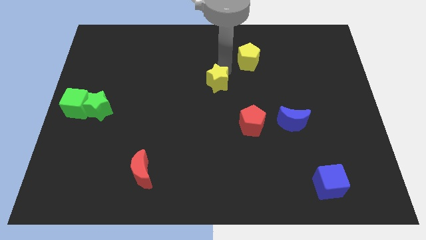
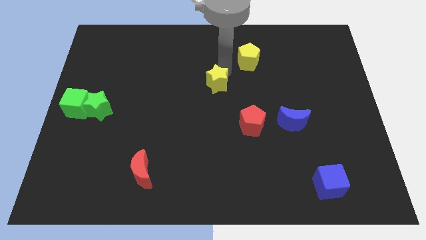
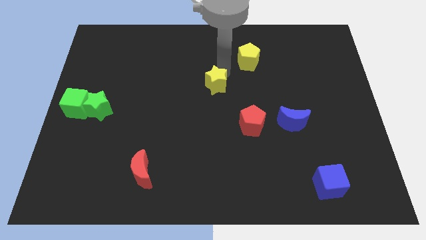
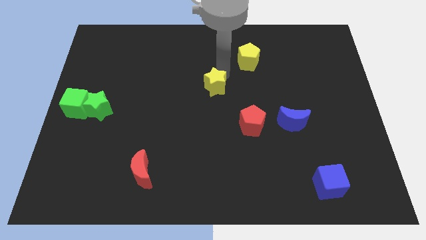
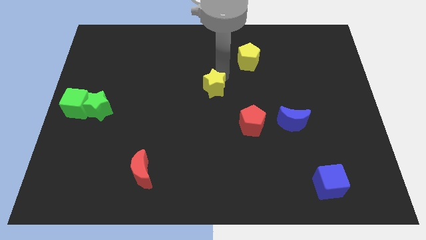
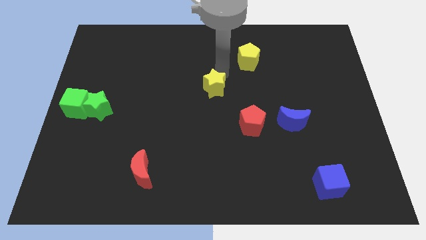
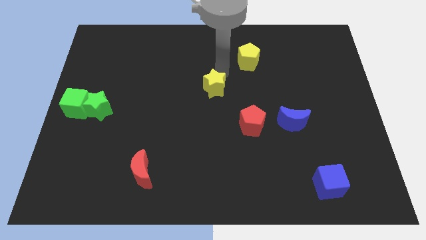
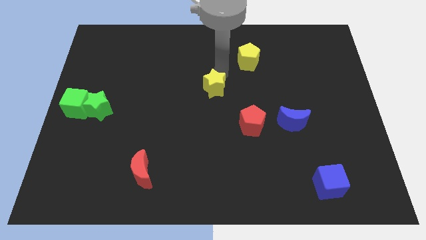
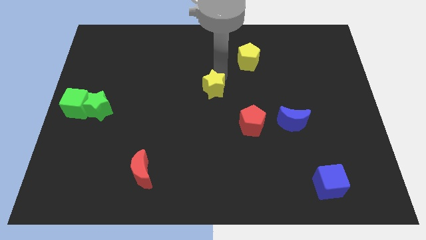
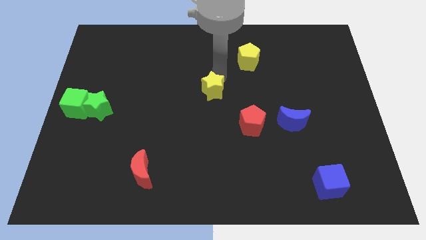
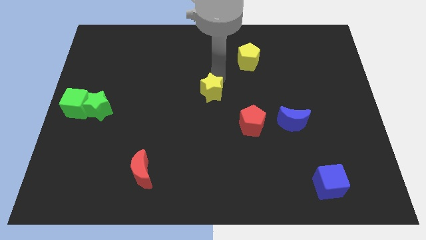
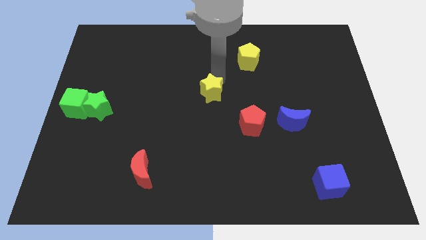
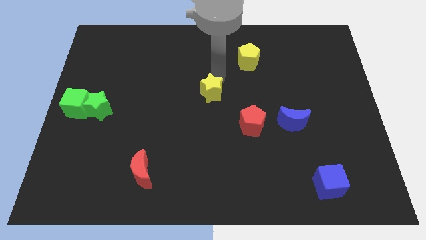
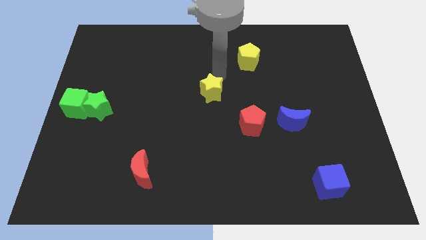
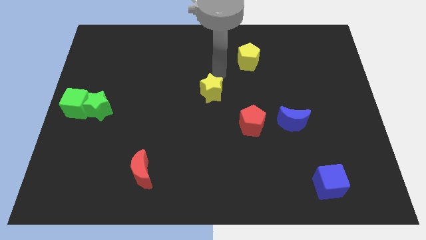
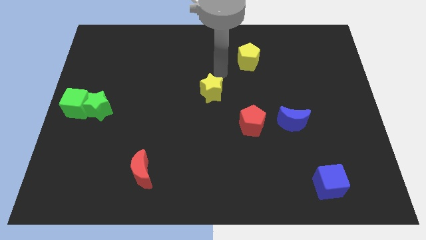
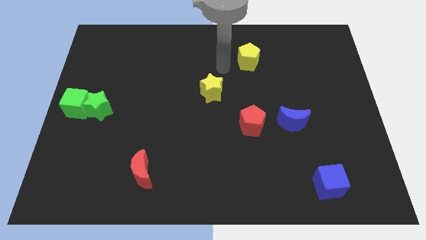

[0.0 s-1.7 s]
drag the yellow star towards the center of the board

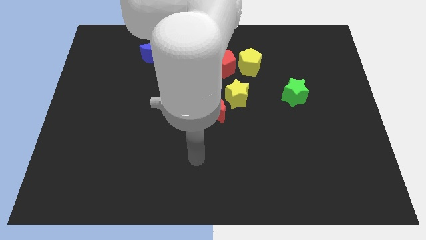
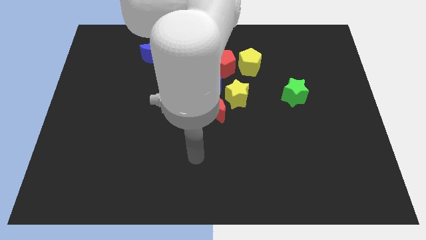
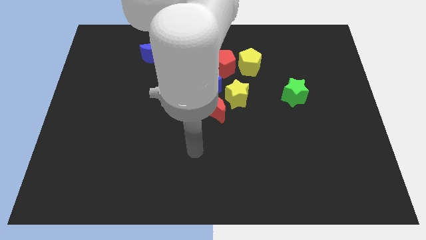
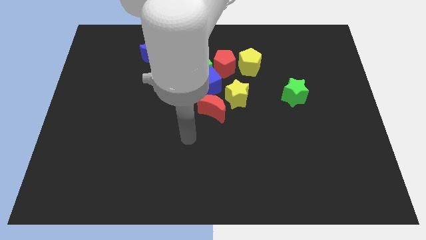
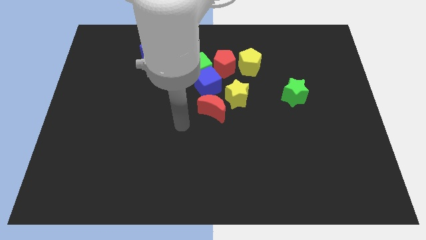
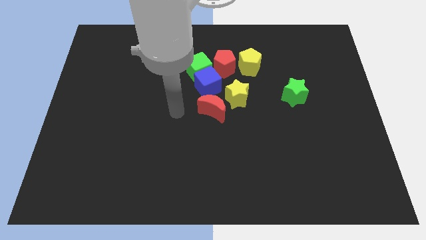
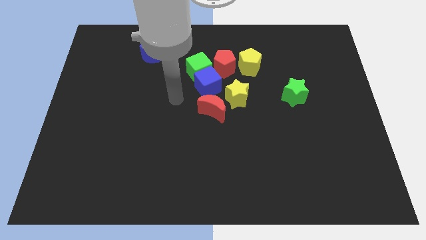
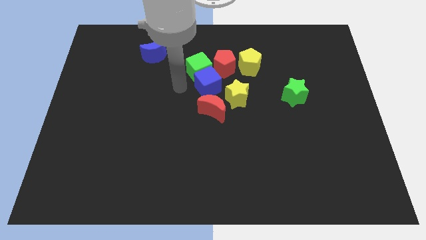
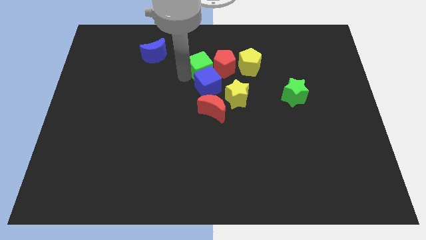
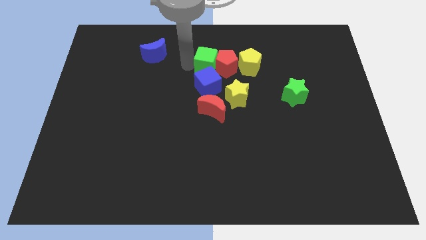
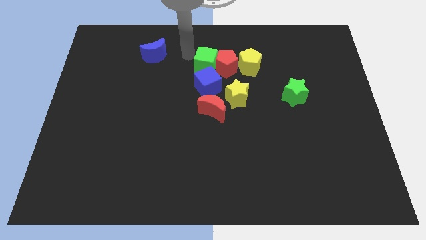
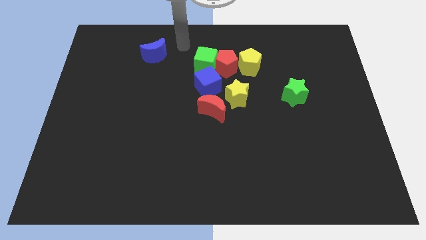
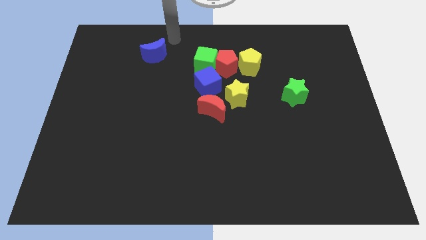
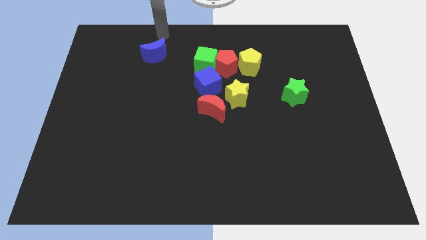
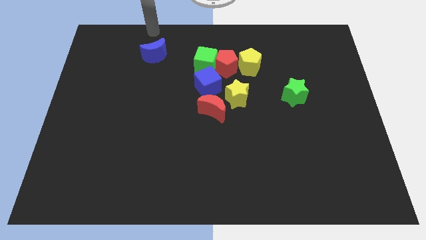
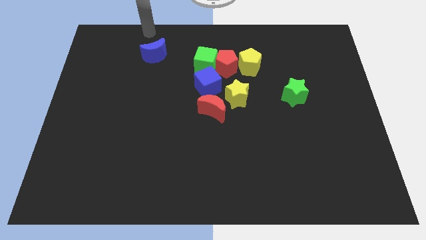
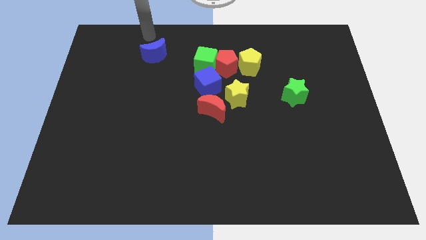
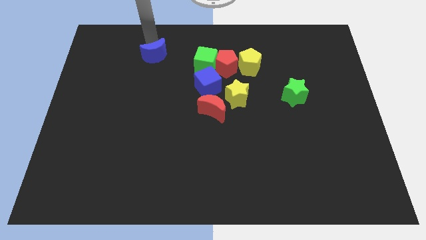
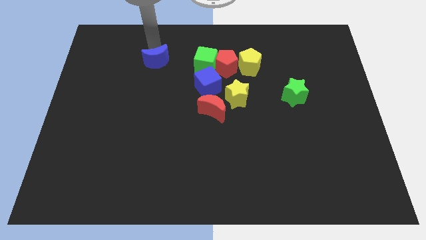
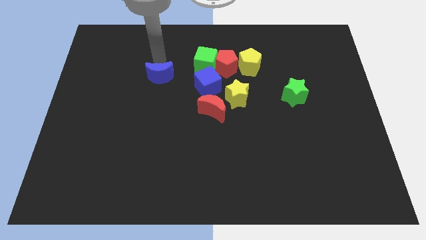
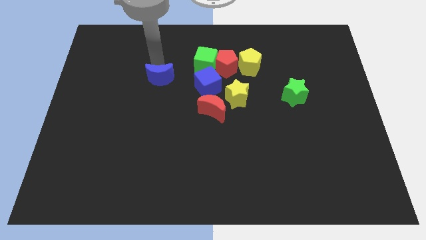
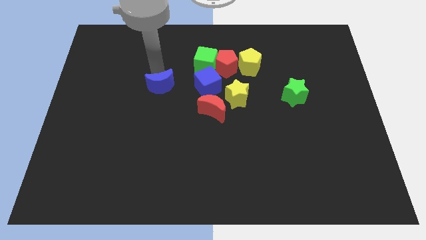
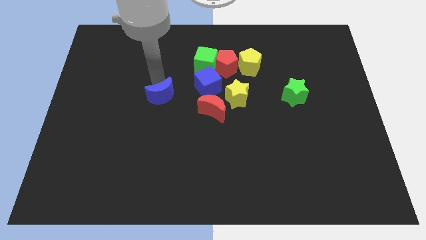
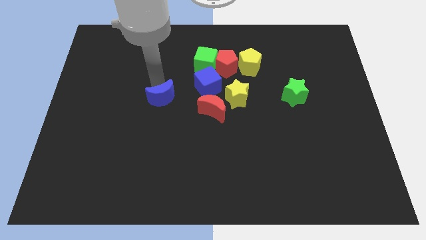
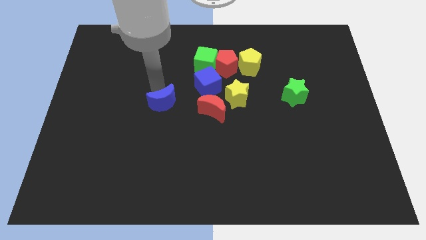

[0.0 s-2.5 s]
place the blue crescent horizontally to the left side of the blue cube

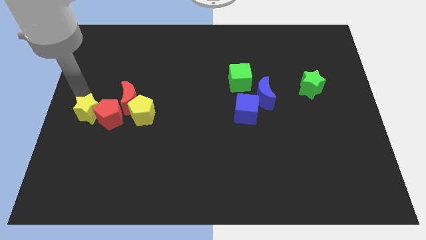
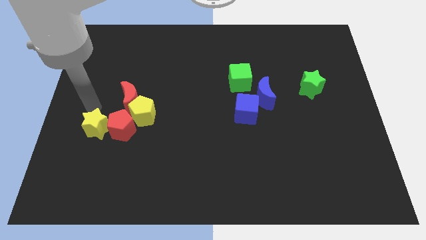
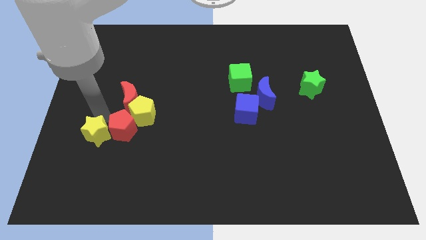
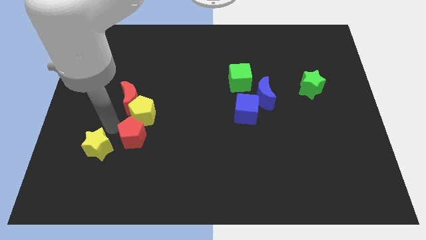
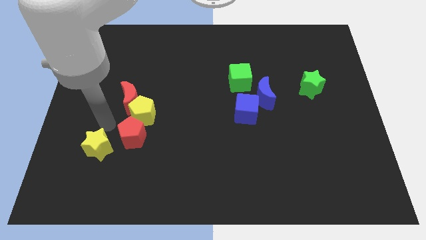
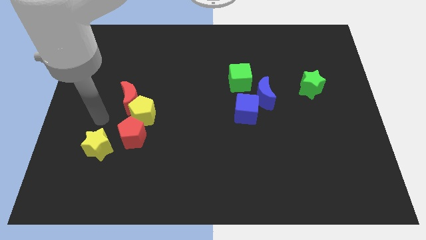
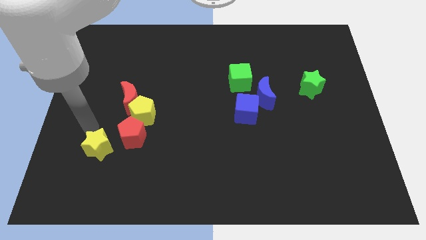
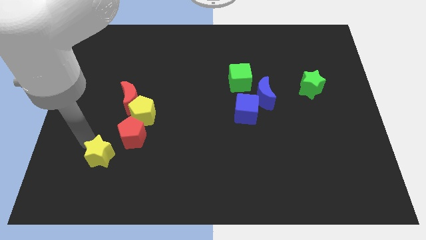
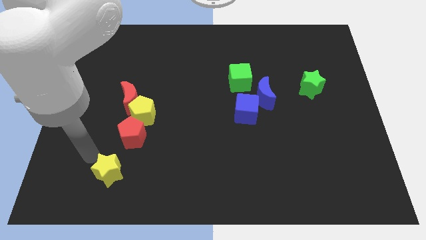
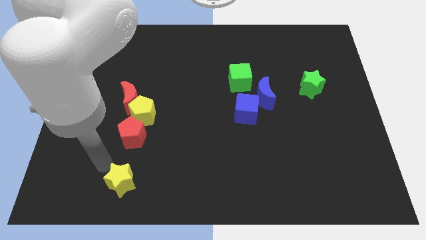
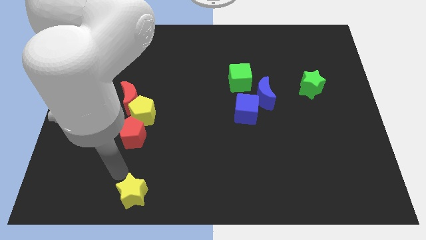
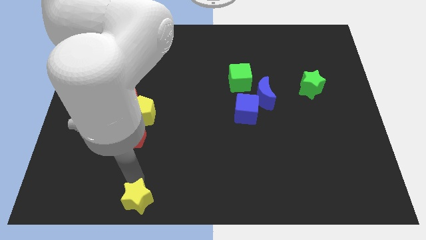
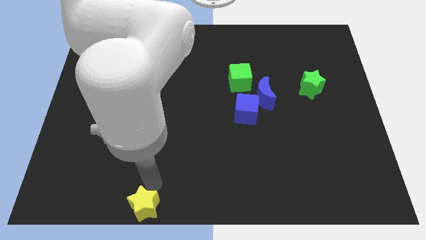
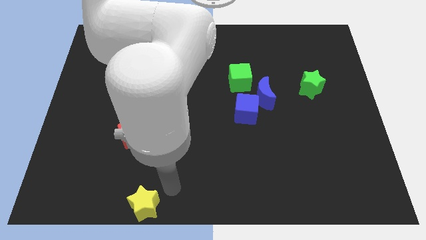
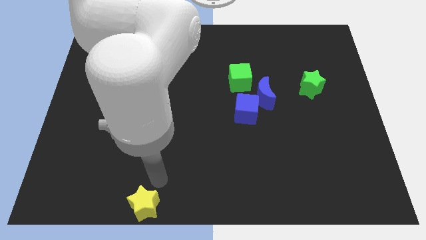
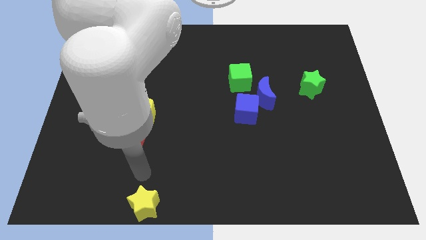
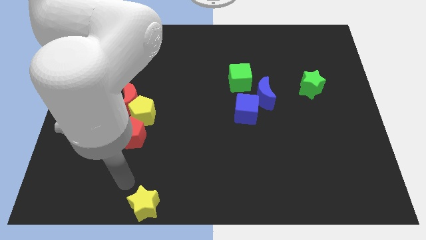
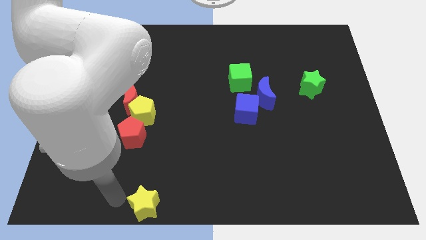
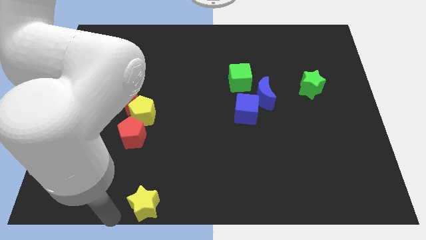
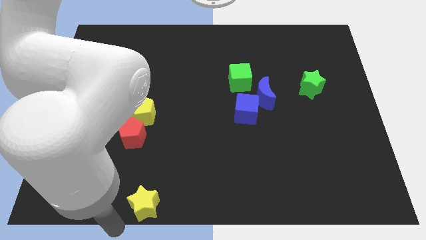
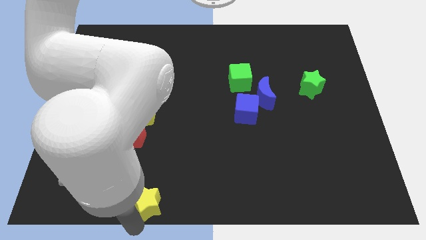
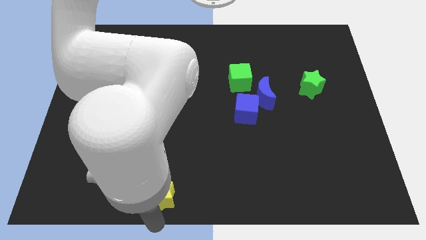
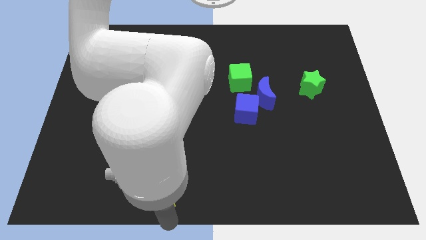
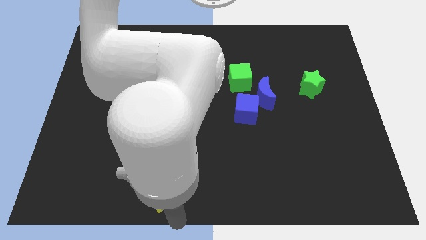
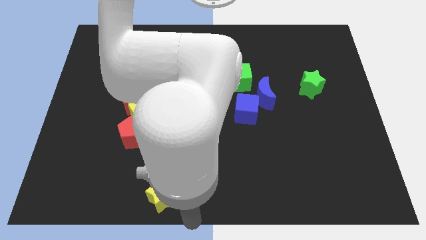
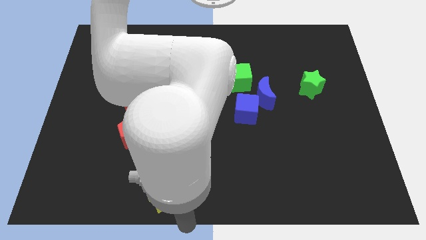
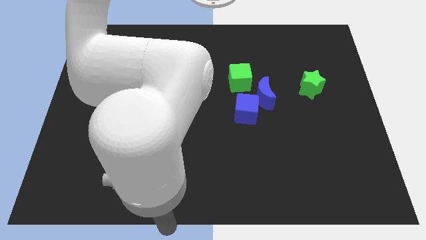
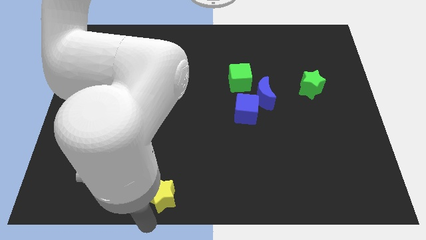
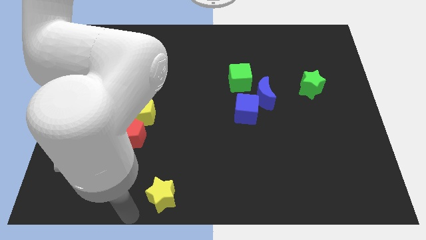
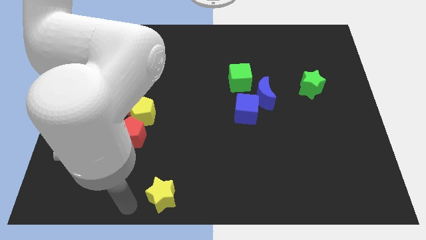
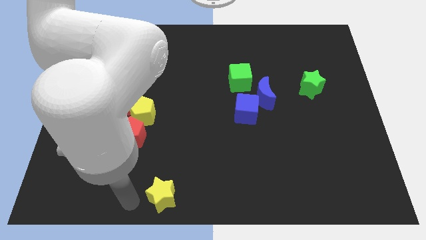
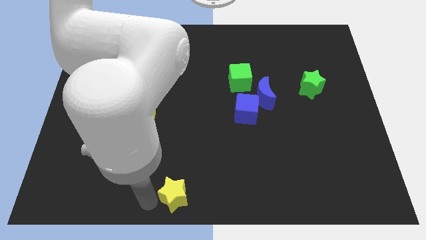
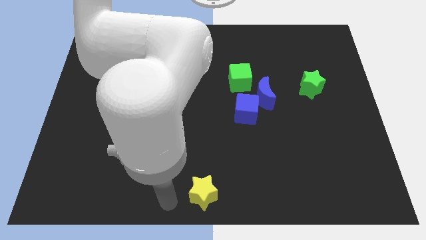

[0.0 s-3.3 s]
separate the yellow star from the group of blocks

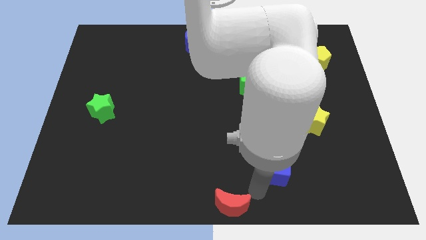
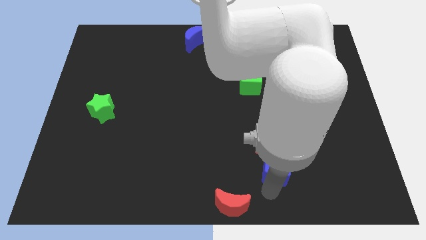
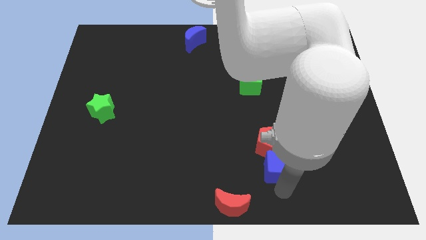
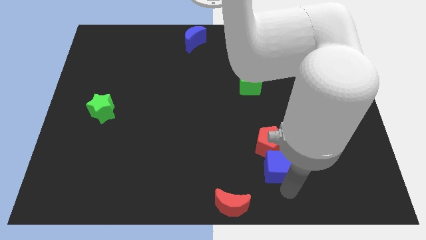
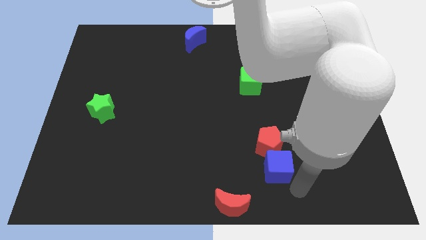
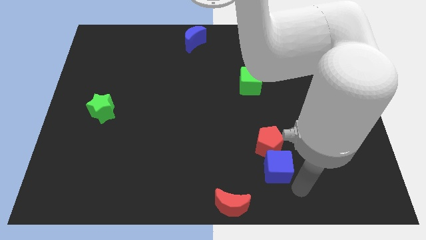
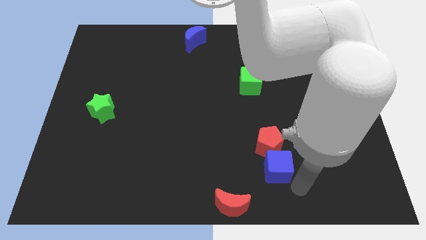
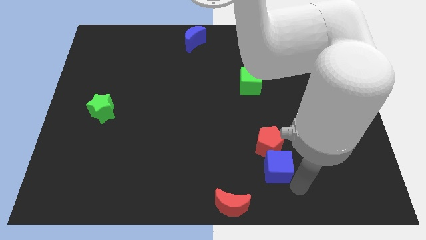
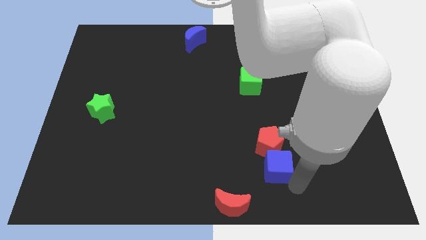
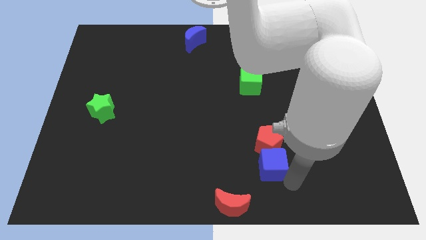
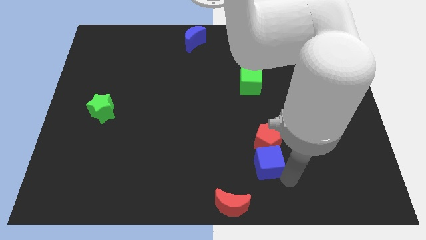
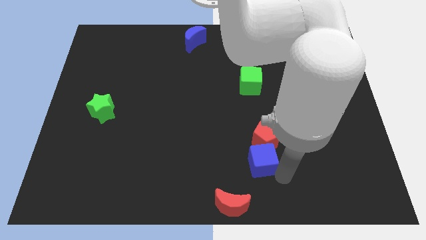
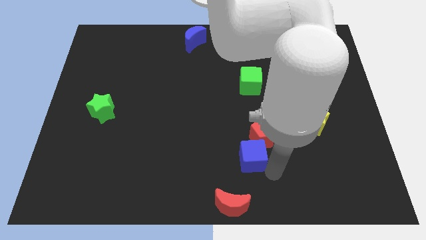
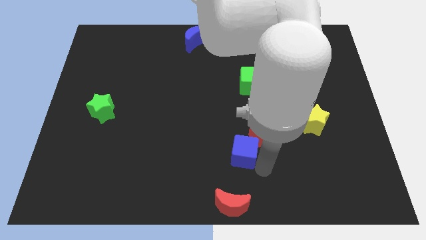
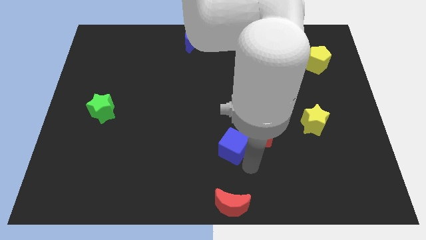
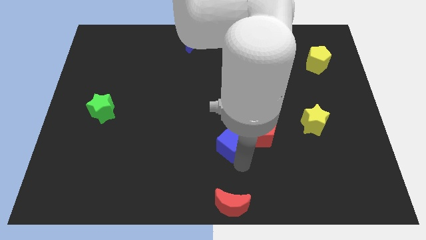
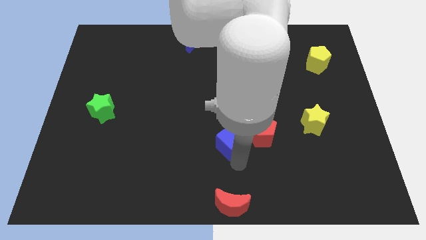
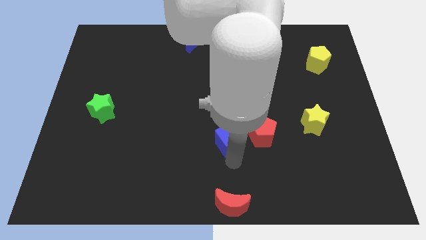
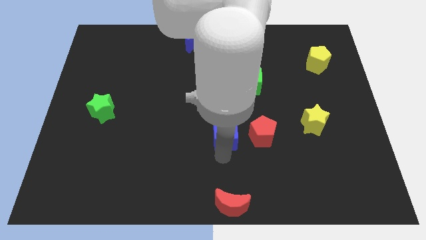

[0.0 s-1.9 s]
push the blue cube to the left side of the red pentagon
